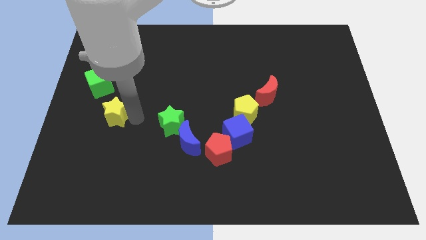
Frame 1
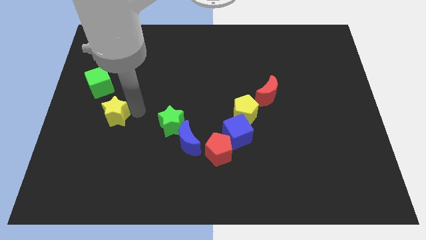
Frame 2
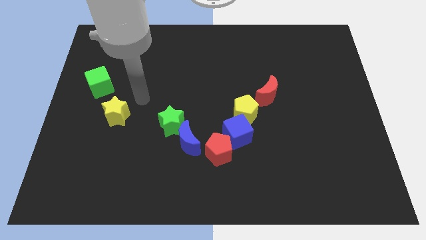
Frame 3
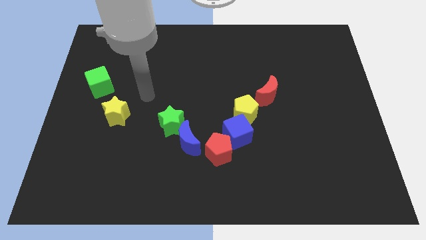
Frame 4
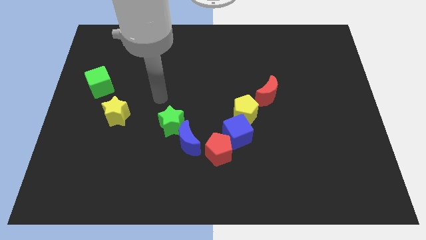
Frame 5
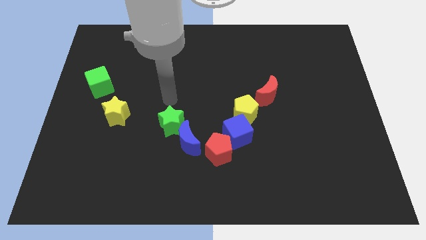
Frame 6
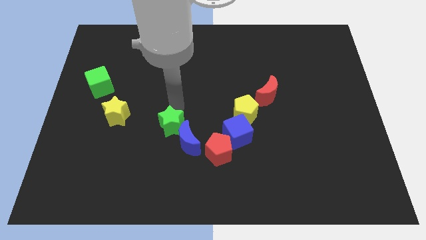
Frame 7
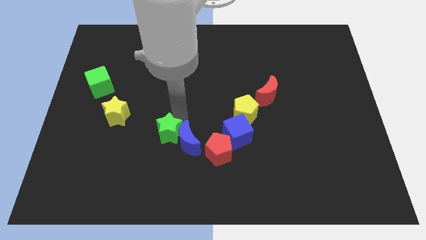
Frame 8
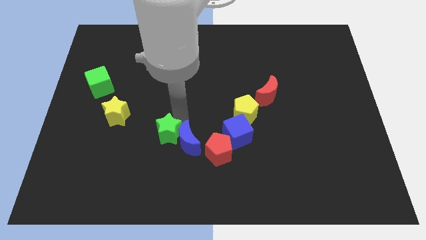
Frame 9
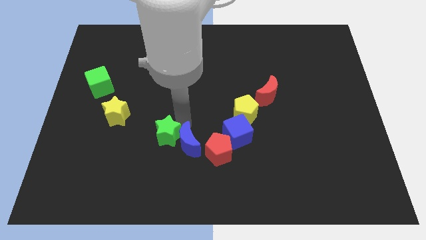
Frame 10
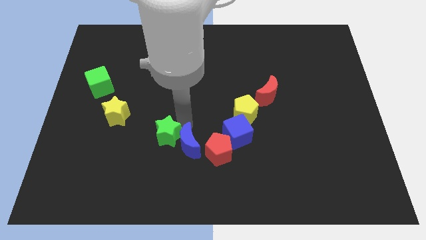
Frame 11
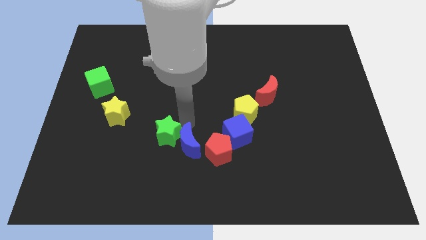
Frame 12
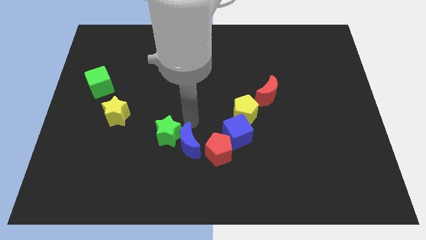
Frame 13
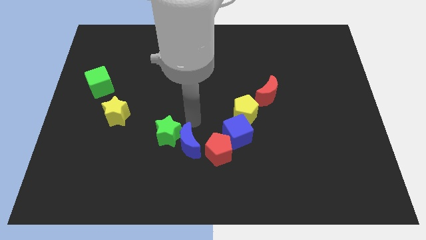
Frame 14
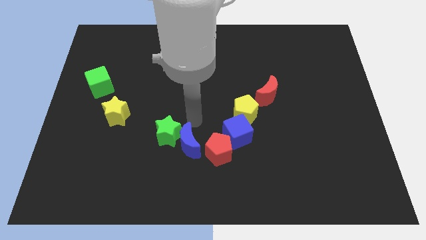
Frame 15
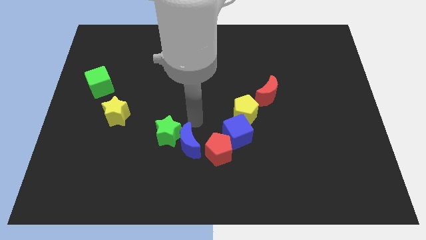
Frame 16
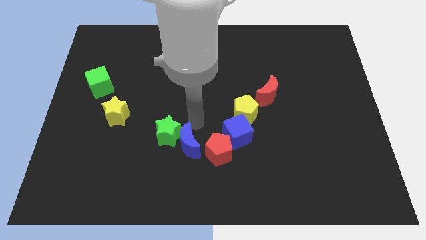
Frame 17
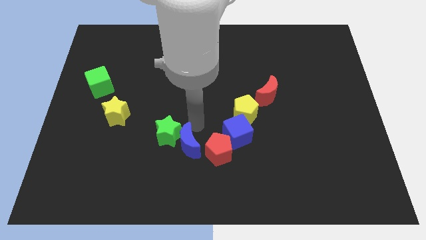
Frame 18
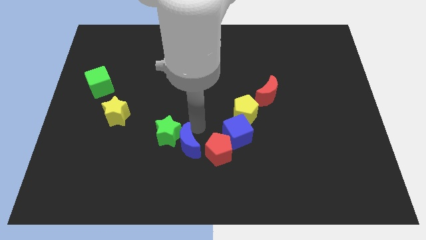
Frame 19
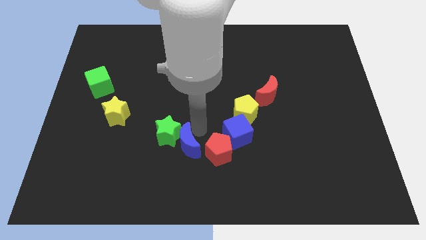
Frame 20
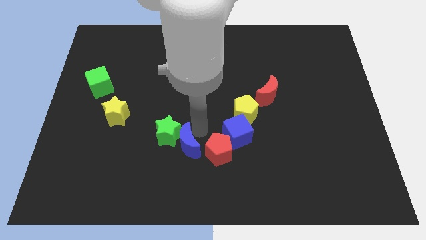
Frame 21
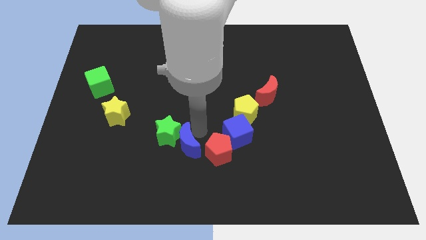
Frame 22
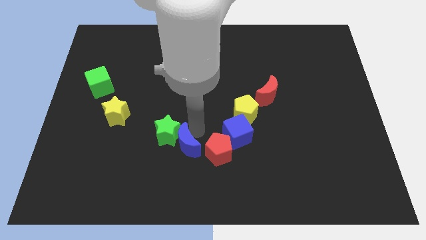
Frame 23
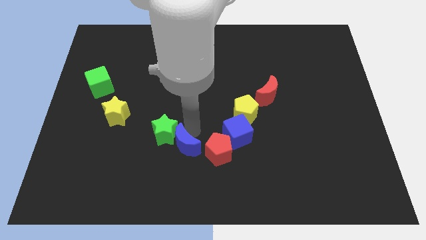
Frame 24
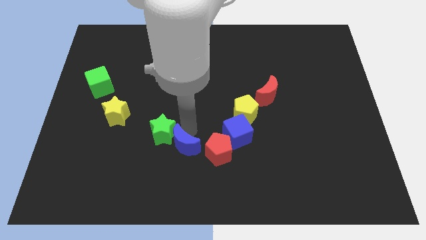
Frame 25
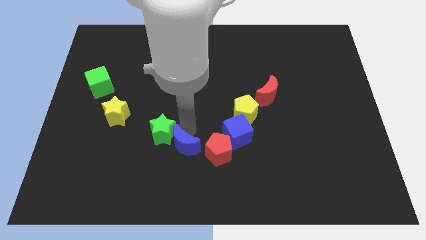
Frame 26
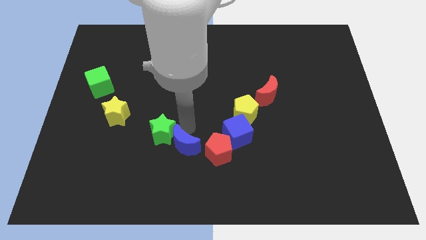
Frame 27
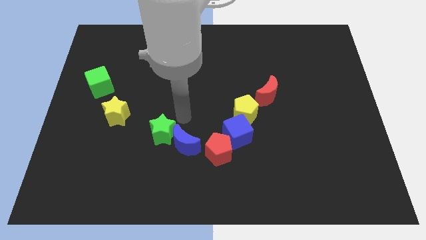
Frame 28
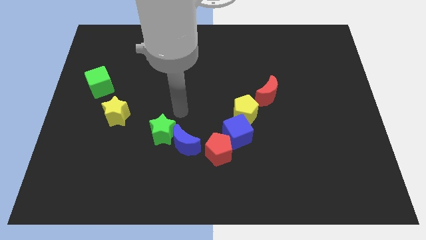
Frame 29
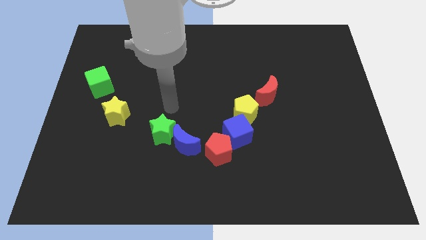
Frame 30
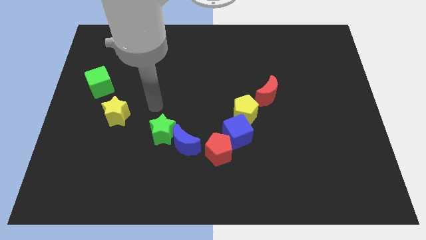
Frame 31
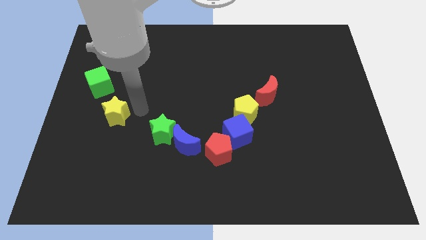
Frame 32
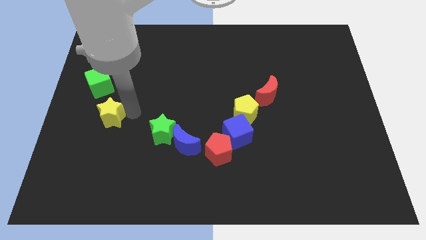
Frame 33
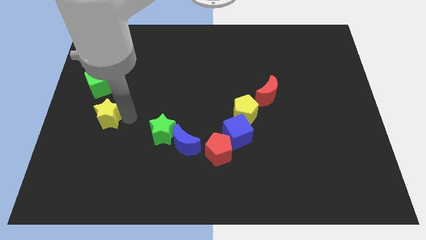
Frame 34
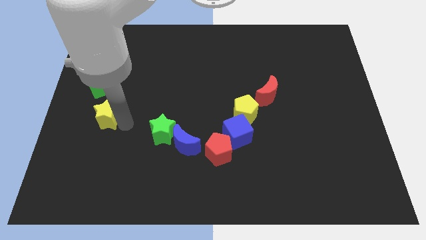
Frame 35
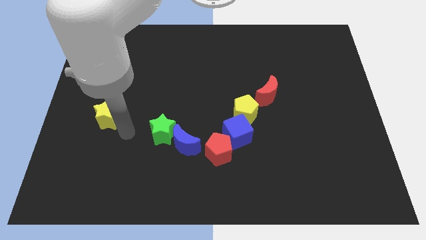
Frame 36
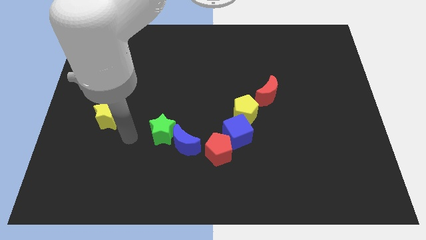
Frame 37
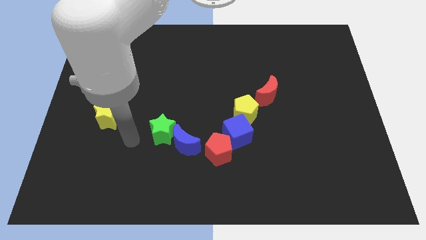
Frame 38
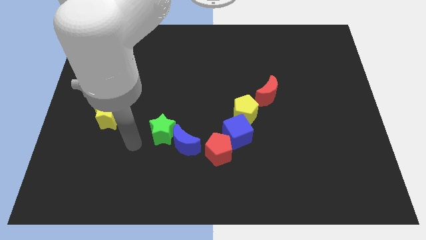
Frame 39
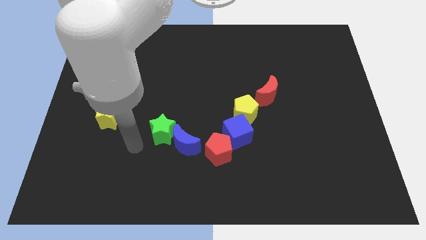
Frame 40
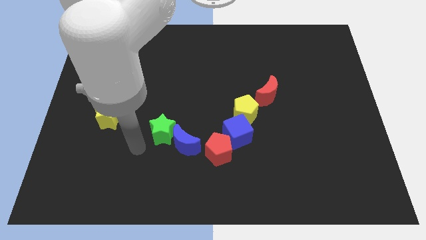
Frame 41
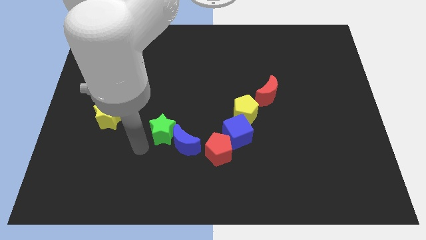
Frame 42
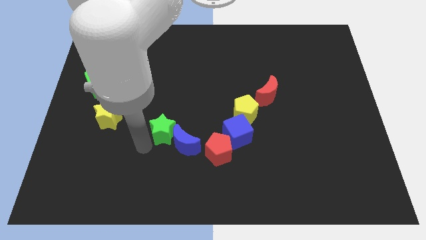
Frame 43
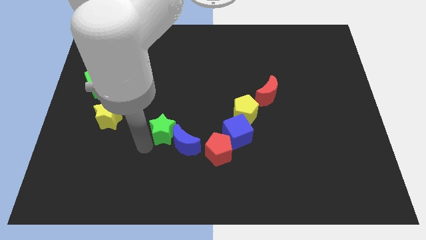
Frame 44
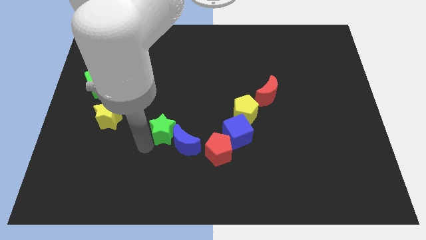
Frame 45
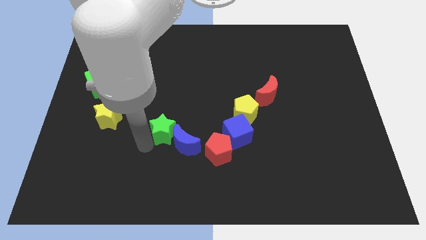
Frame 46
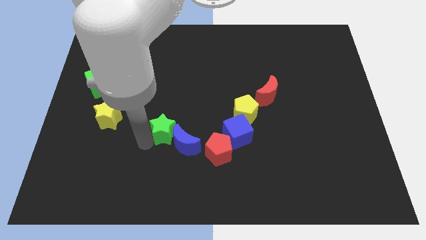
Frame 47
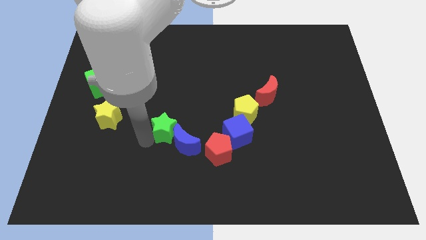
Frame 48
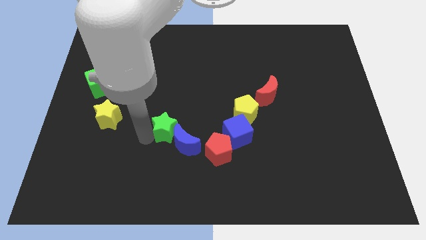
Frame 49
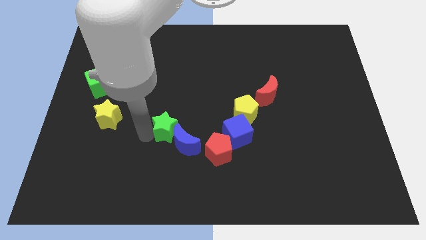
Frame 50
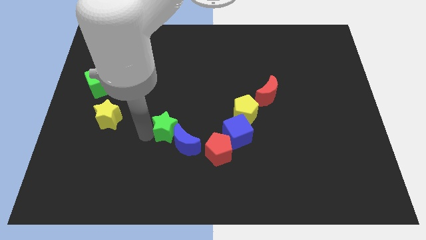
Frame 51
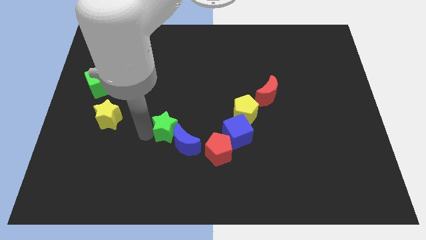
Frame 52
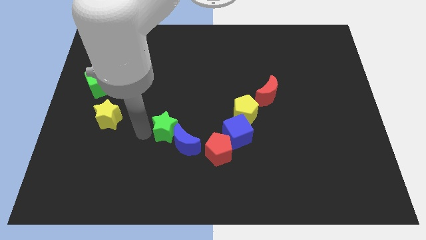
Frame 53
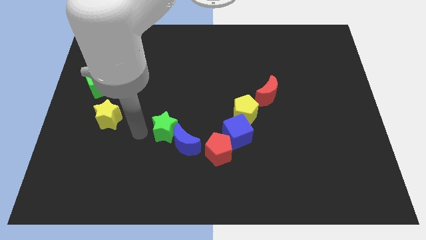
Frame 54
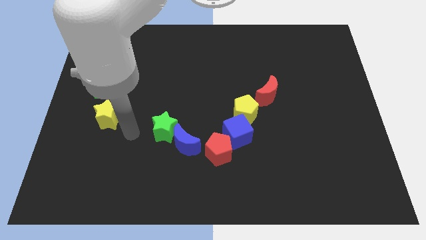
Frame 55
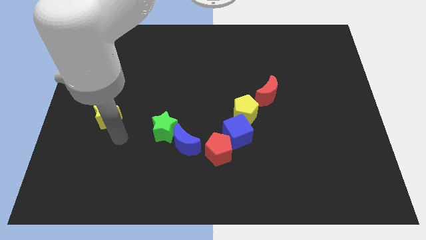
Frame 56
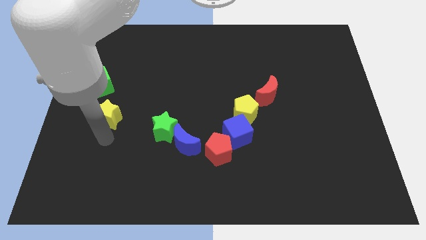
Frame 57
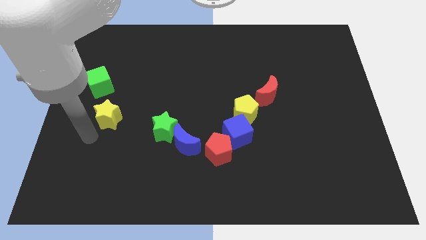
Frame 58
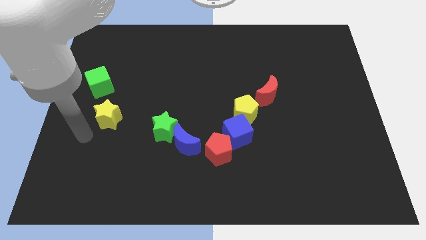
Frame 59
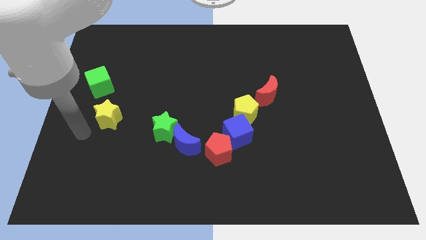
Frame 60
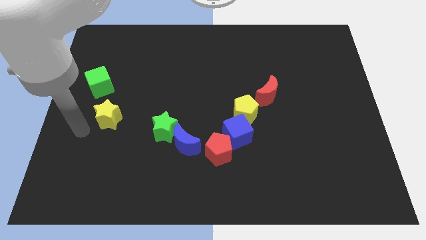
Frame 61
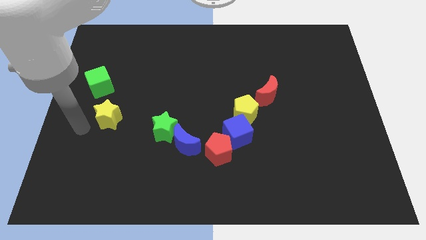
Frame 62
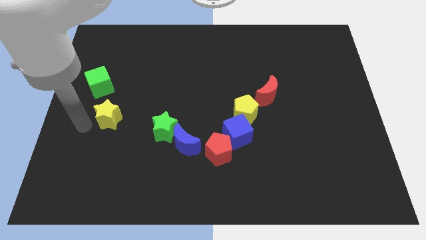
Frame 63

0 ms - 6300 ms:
adjust the green star and the blue moon

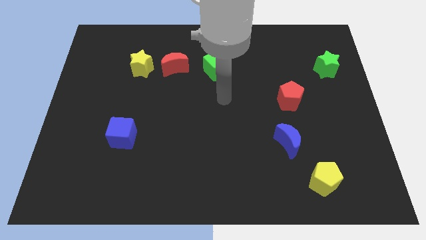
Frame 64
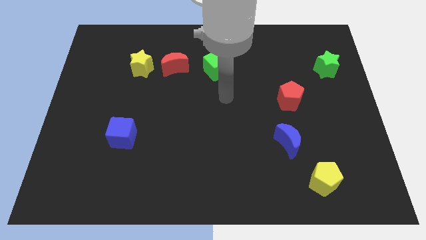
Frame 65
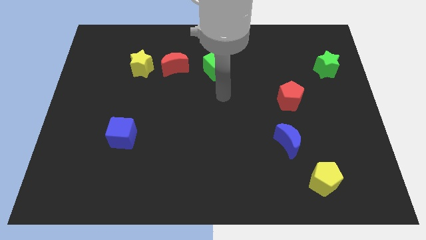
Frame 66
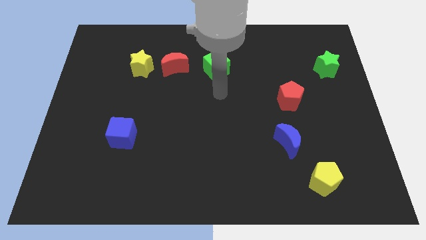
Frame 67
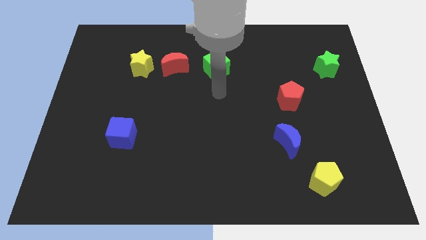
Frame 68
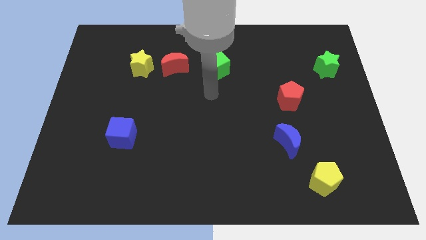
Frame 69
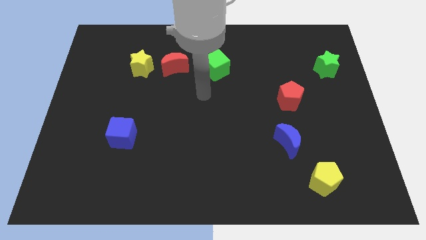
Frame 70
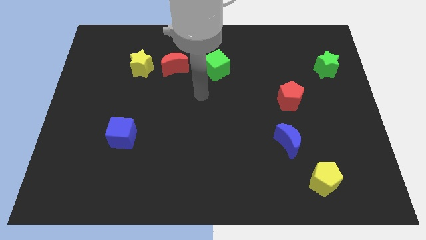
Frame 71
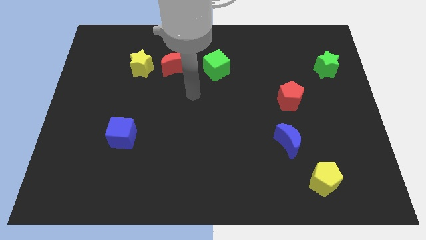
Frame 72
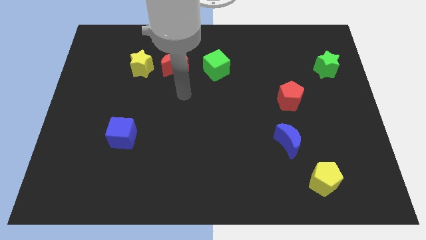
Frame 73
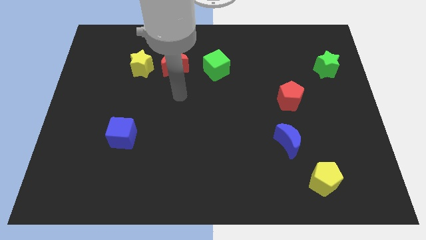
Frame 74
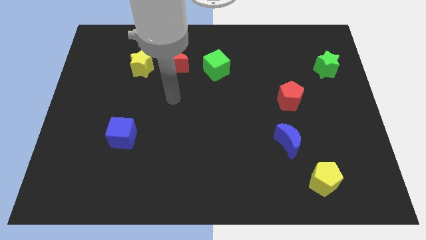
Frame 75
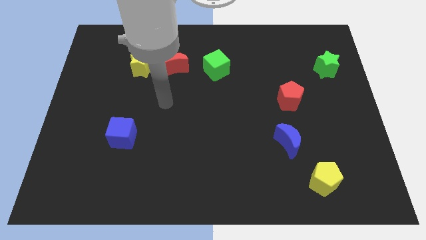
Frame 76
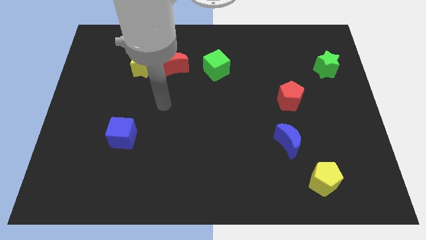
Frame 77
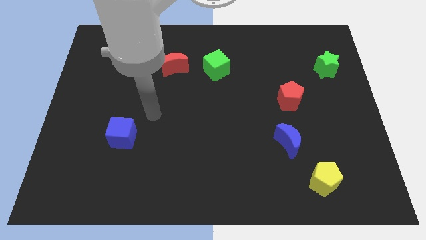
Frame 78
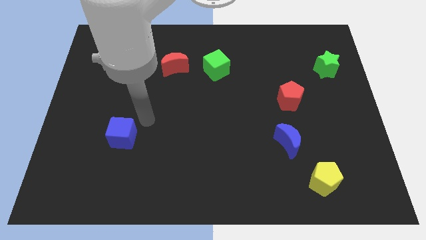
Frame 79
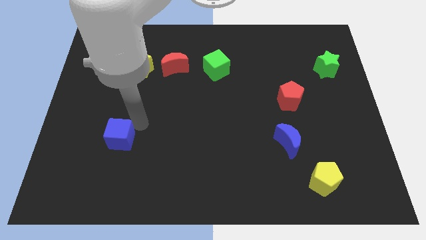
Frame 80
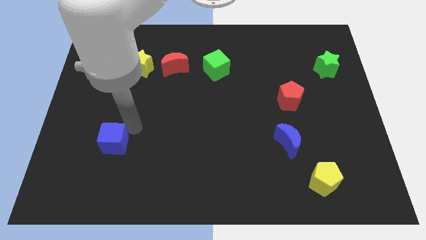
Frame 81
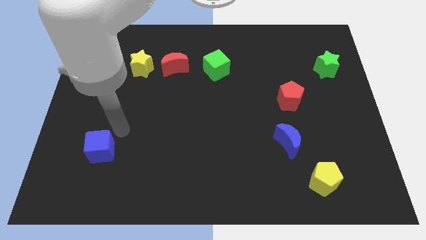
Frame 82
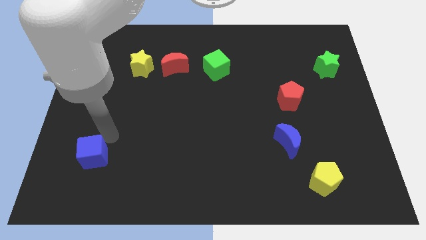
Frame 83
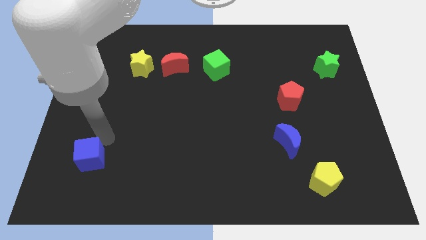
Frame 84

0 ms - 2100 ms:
slightly move the blue cube towards the bottom left side of the board

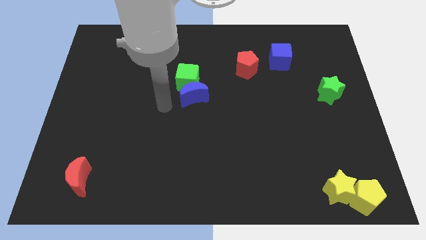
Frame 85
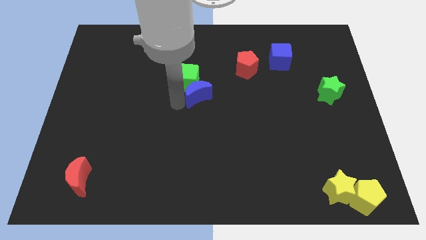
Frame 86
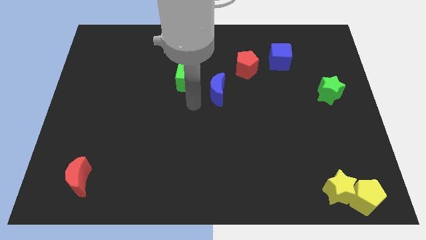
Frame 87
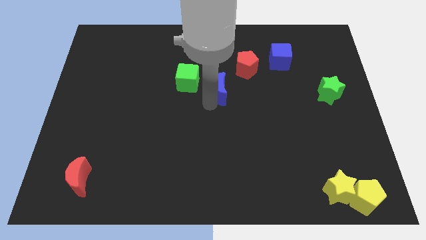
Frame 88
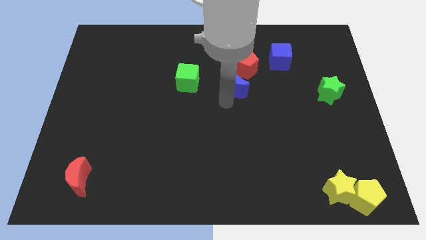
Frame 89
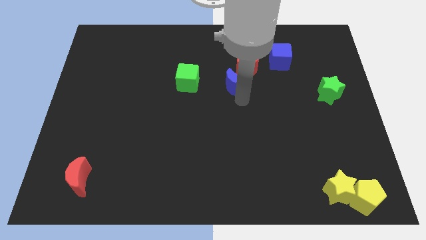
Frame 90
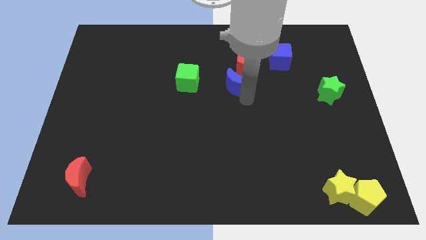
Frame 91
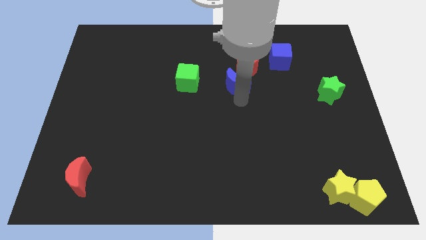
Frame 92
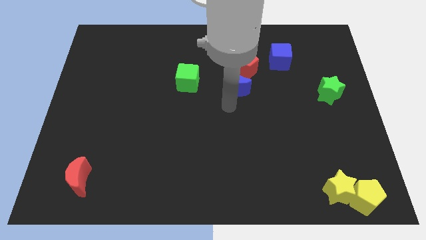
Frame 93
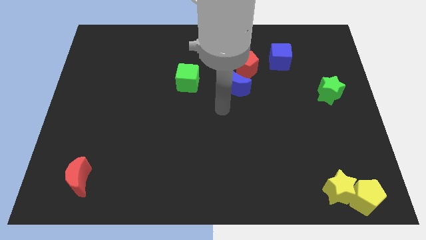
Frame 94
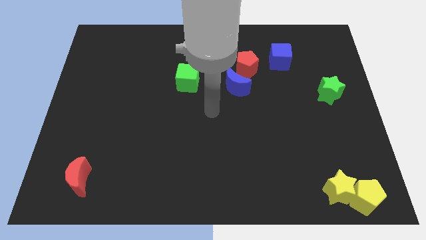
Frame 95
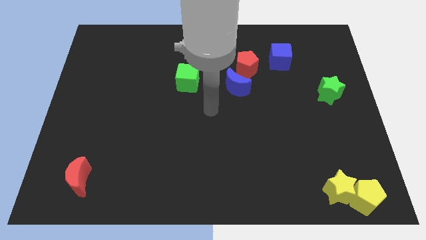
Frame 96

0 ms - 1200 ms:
place the blue moon below the red pentagon
